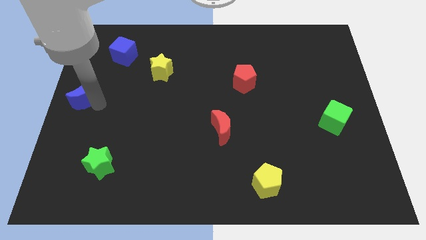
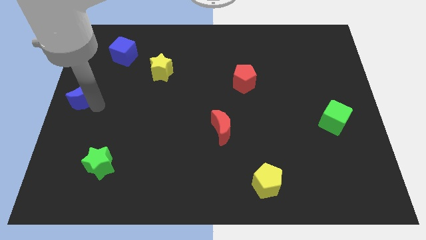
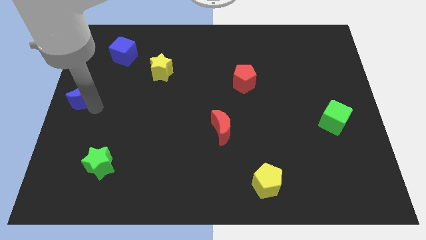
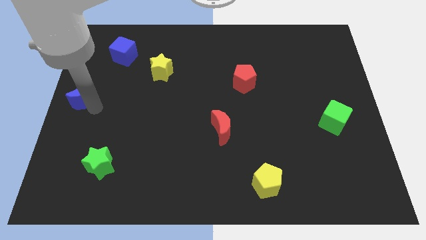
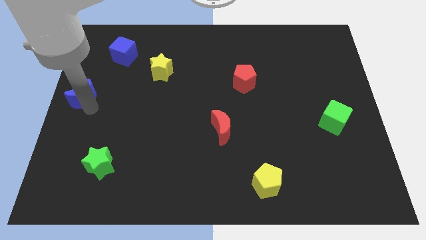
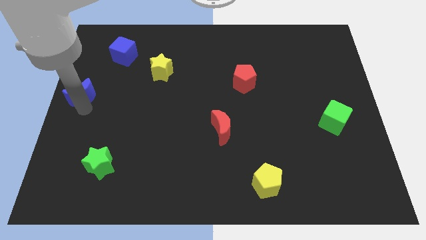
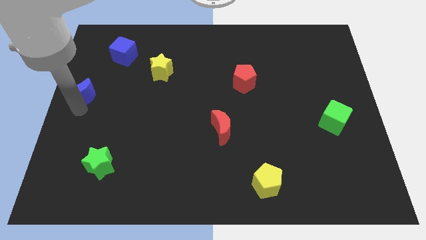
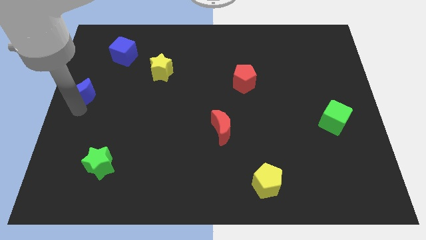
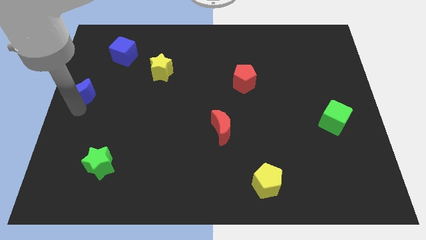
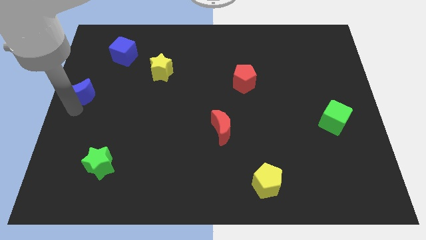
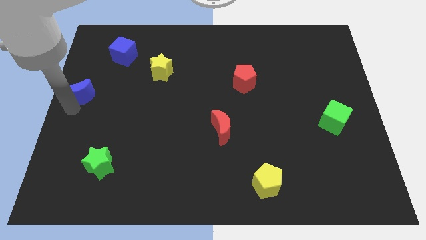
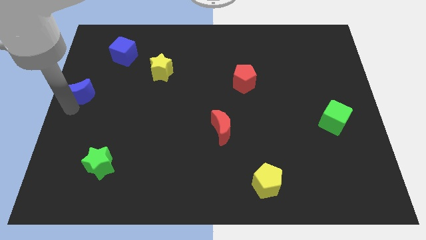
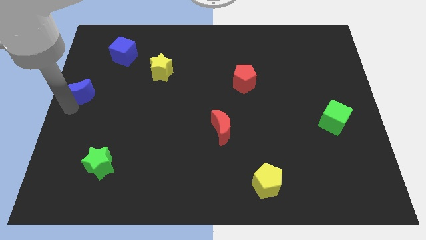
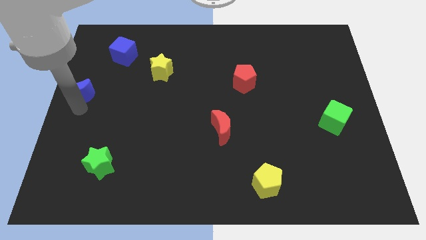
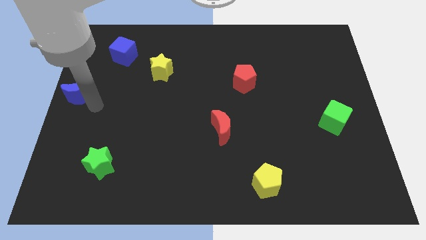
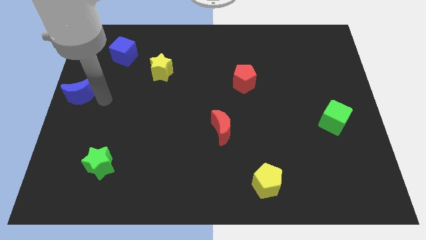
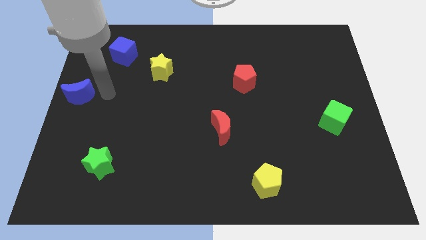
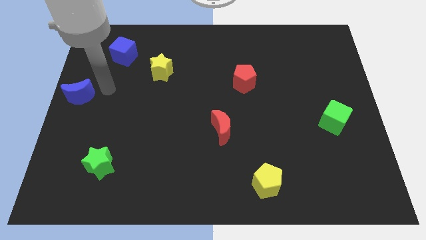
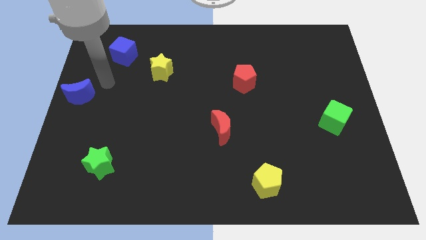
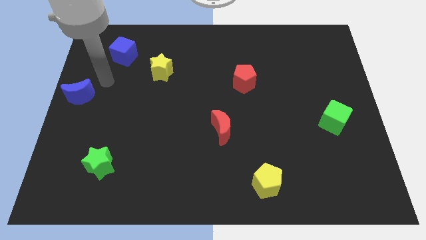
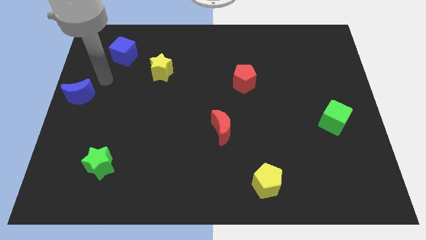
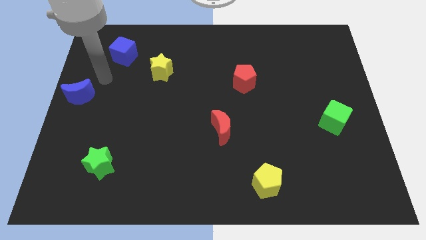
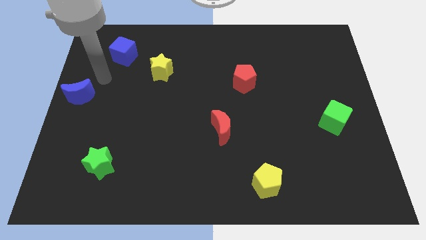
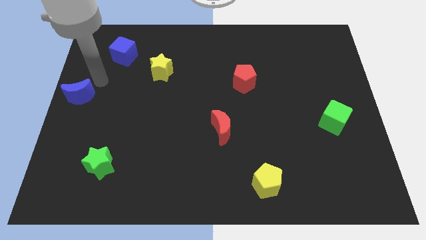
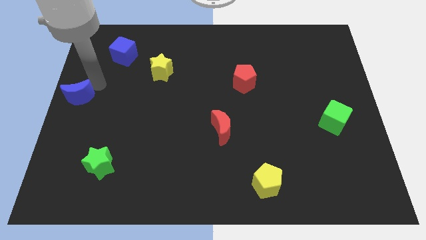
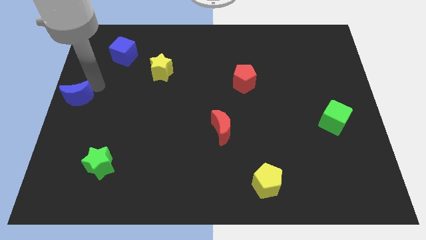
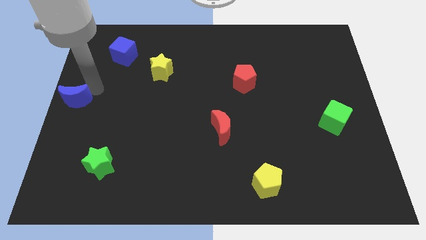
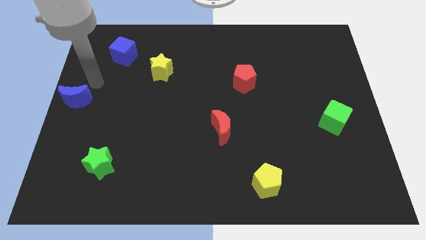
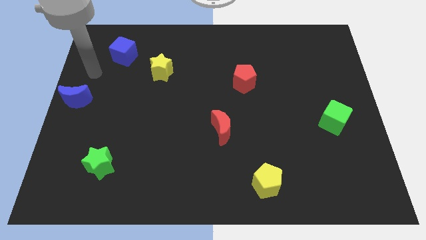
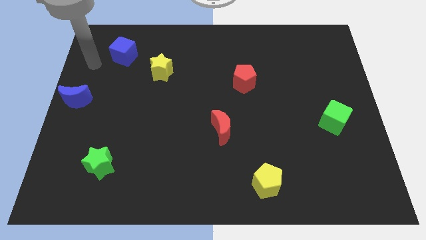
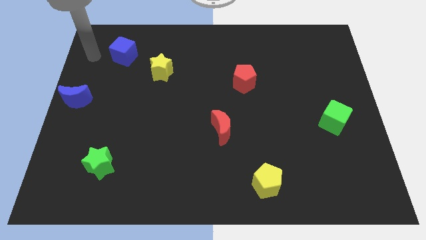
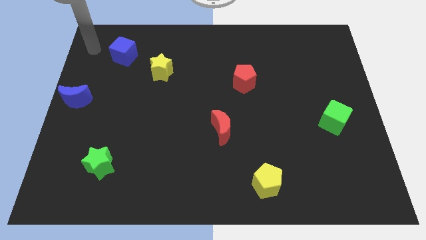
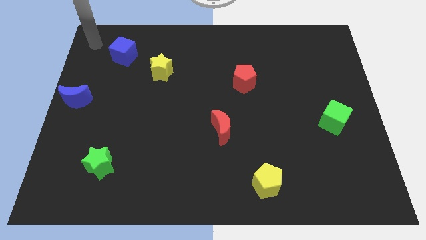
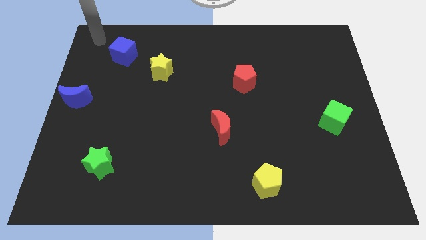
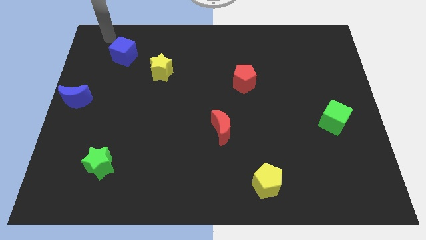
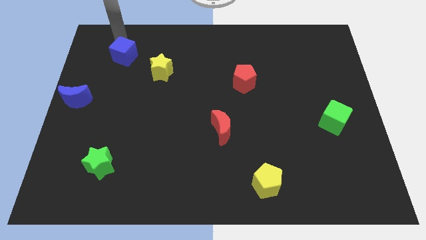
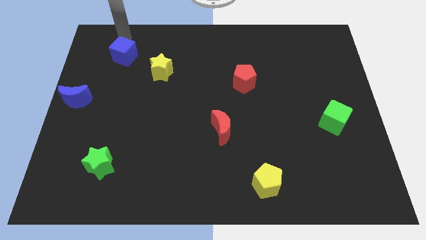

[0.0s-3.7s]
slightly push the blue crescent towards the left center of the board

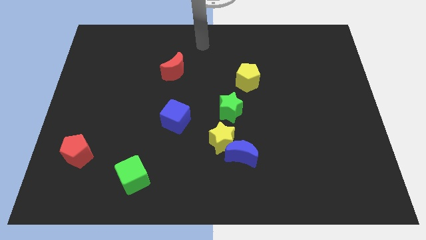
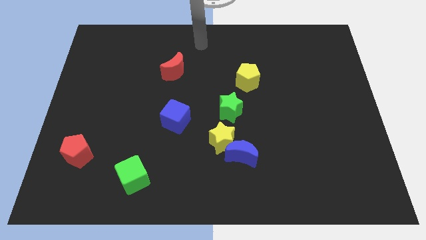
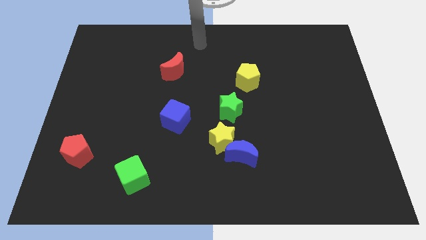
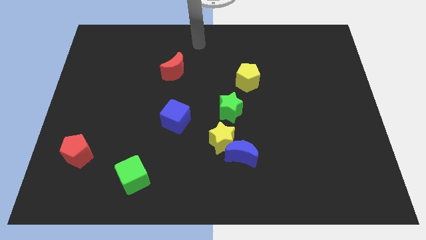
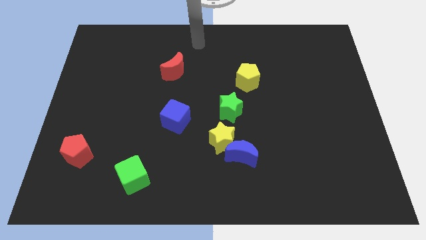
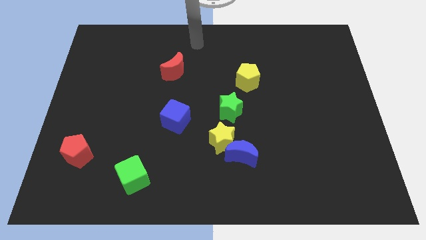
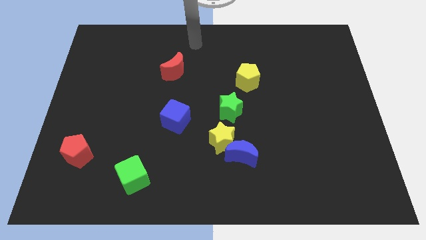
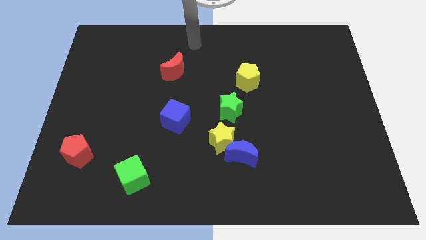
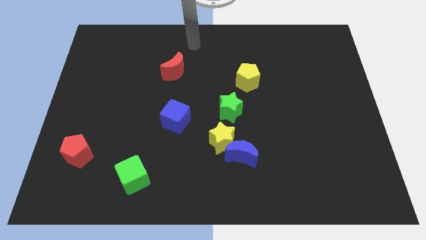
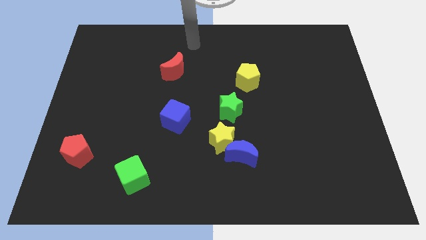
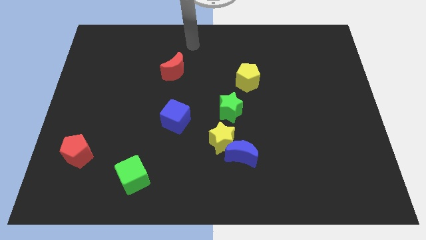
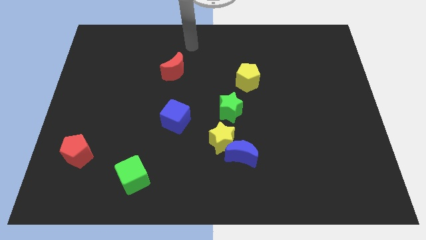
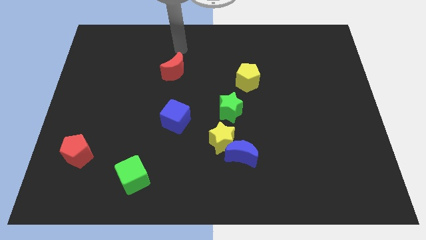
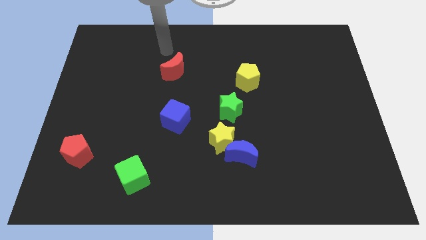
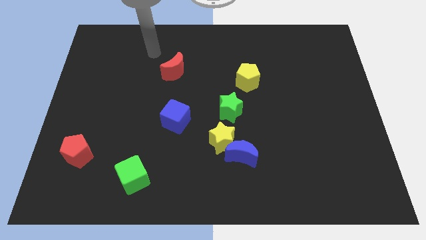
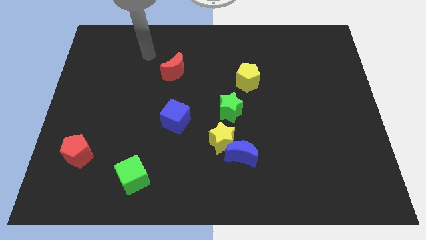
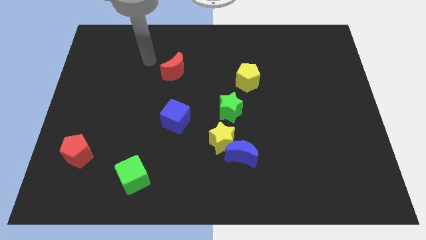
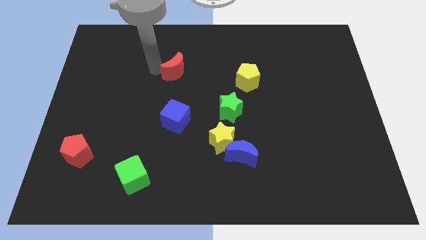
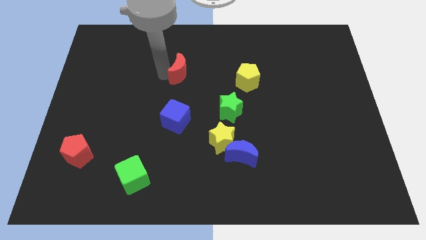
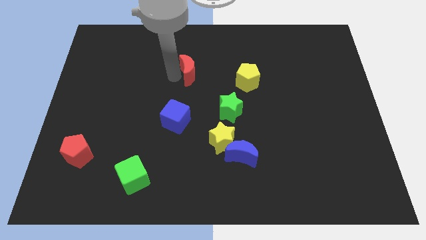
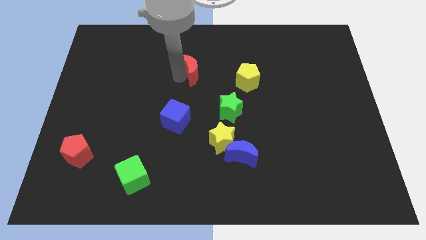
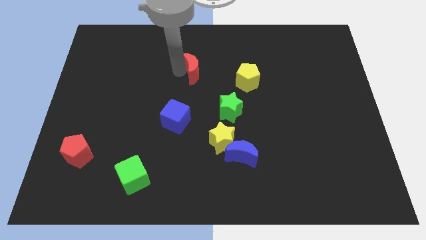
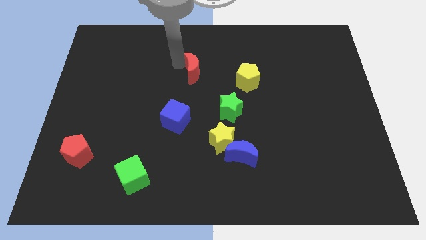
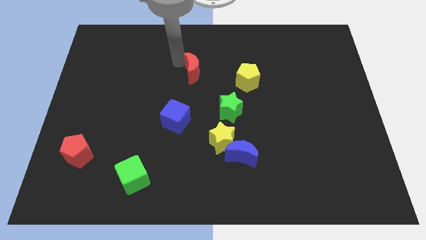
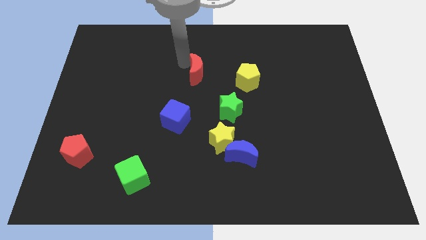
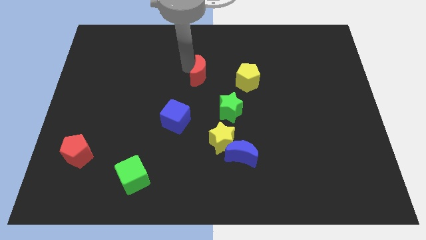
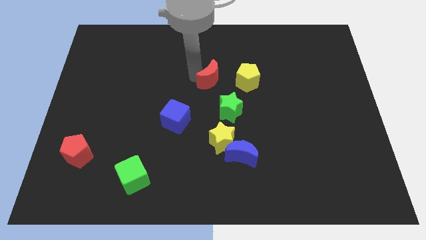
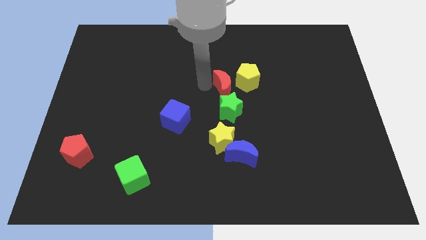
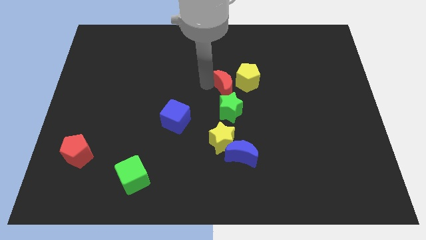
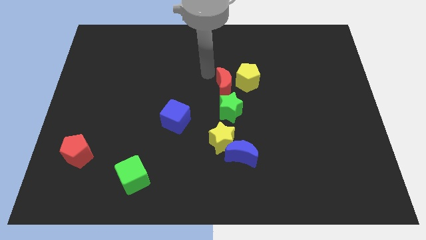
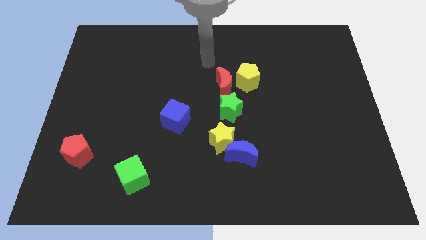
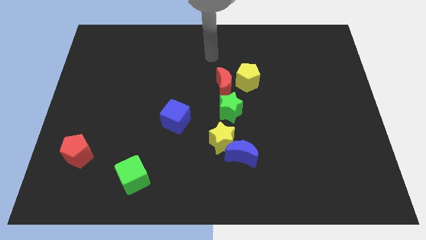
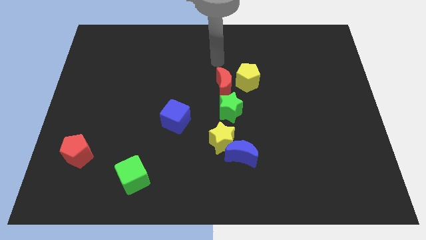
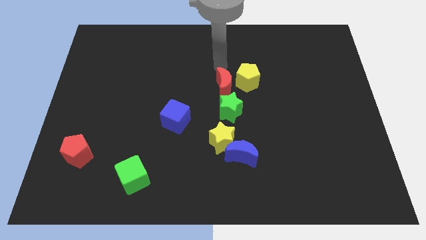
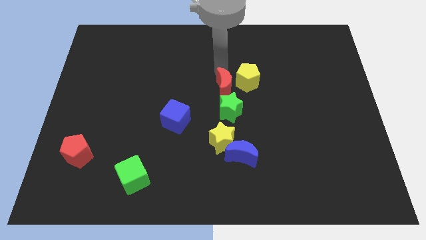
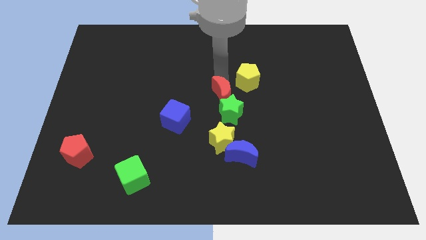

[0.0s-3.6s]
move red moon left above green star

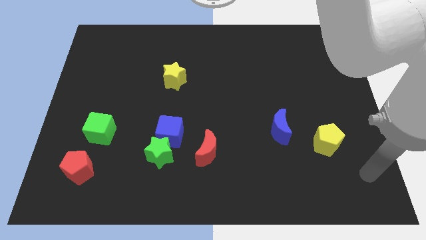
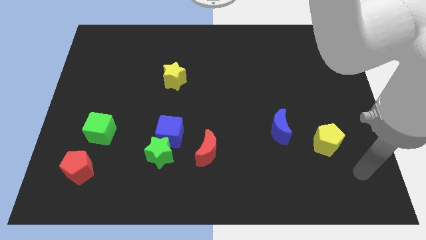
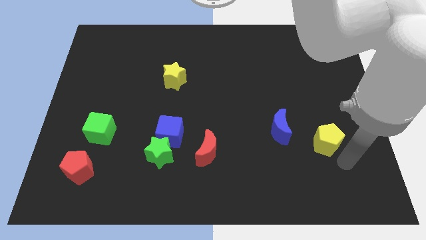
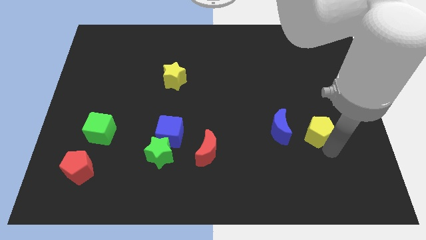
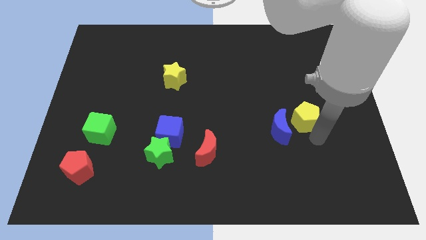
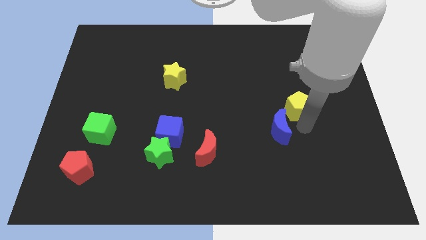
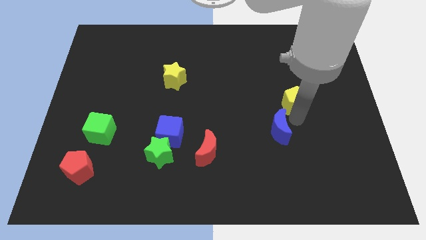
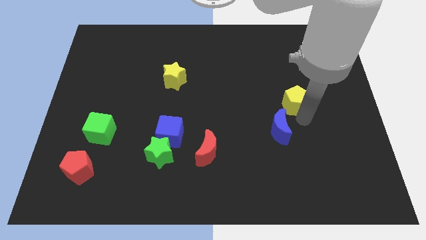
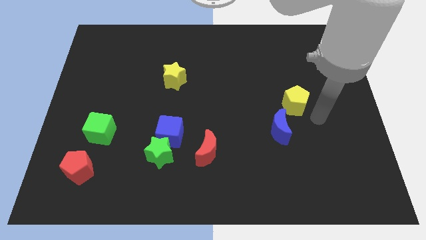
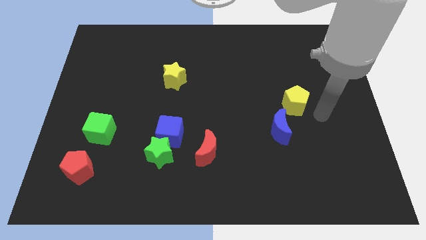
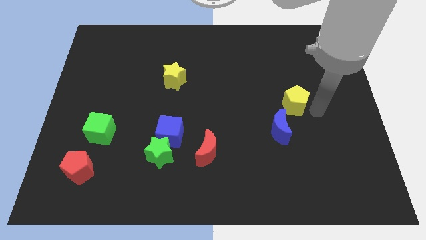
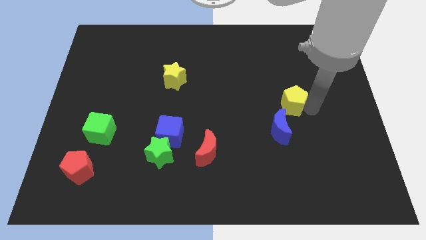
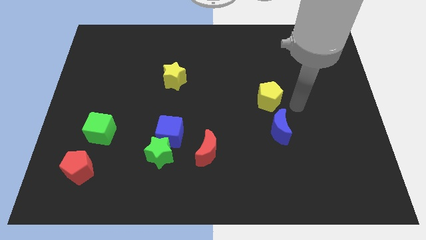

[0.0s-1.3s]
place the yellow pentagon above the blue moon

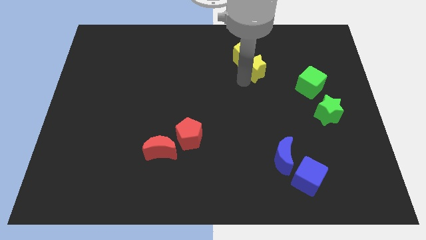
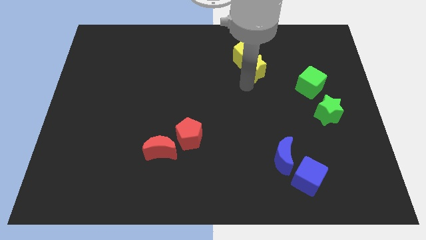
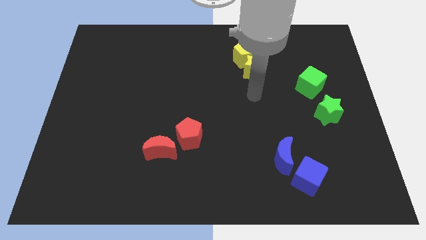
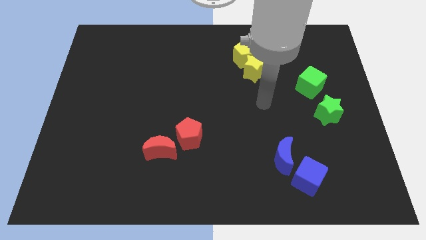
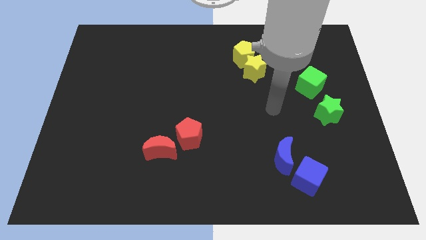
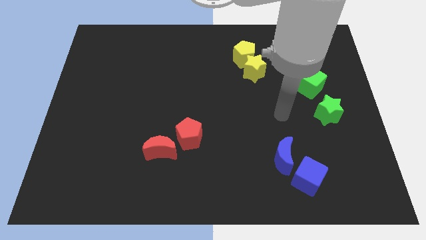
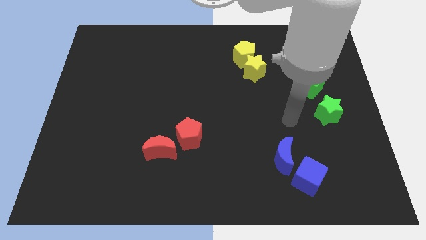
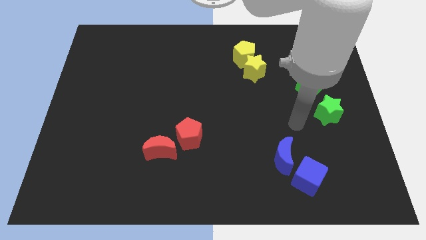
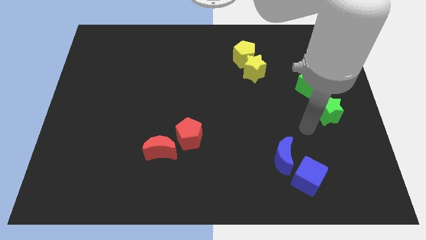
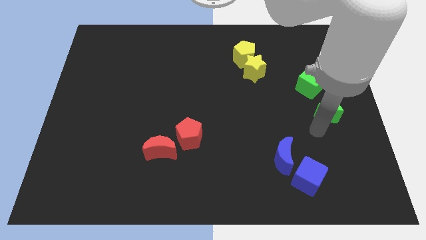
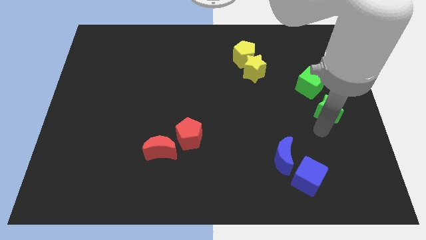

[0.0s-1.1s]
slide the pointer to the bottom of the green star
